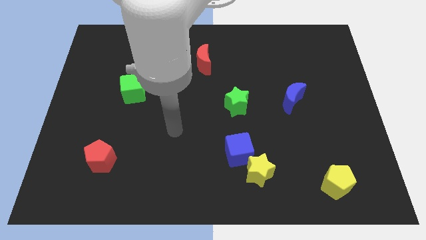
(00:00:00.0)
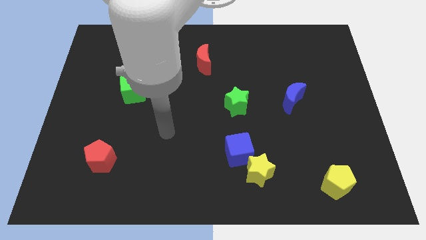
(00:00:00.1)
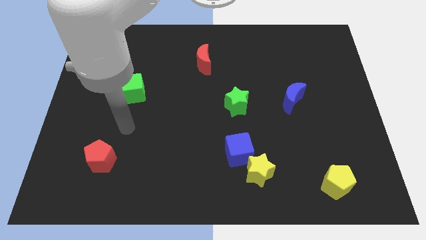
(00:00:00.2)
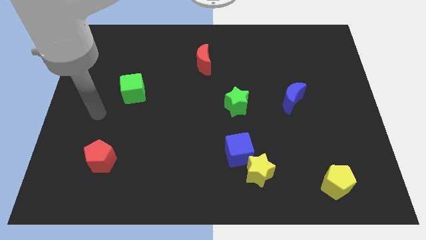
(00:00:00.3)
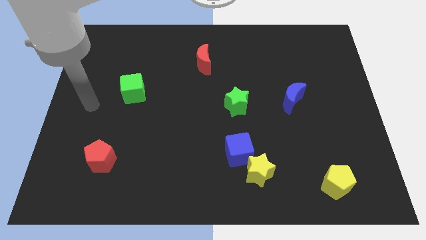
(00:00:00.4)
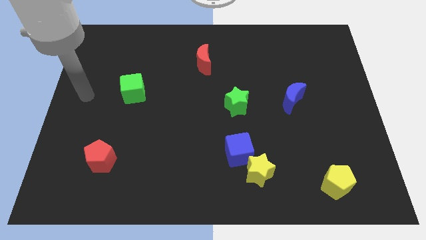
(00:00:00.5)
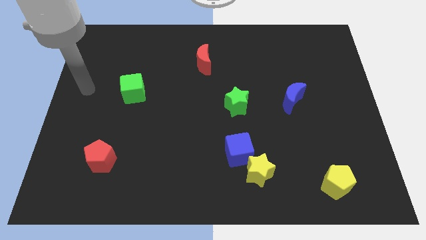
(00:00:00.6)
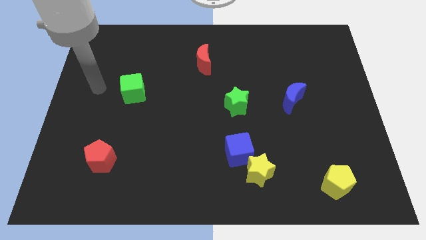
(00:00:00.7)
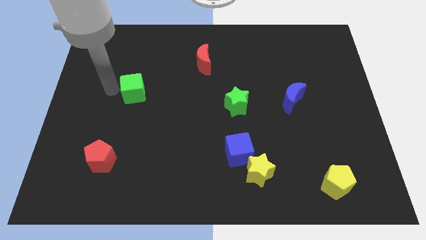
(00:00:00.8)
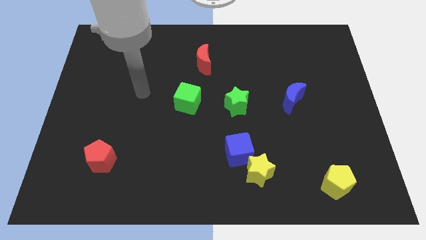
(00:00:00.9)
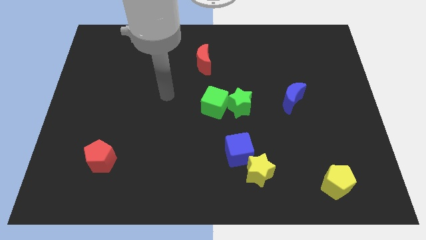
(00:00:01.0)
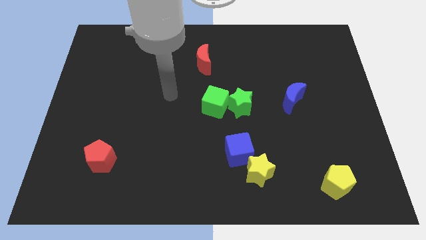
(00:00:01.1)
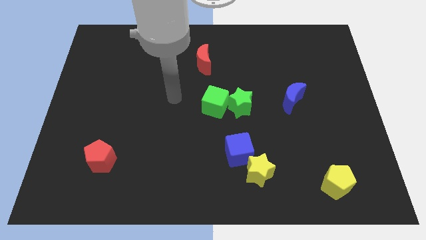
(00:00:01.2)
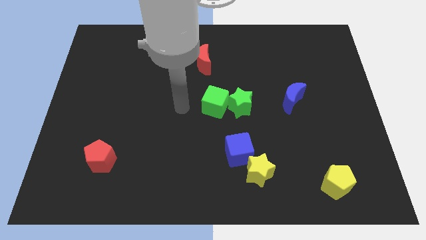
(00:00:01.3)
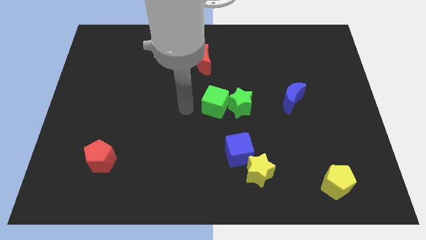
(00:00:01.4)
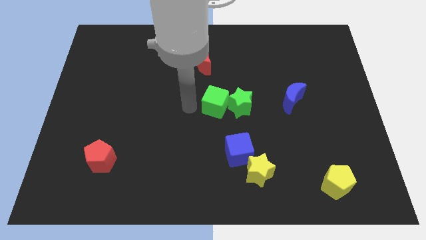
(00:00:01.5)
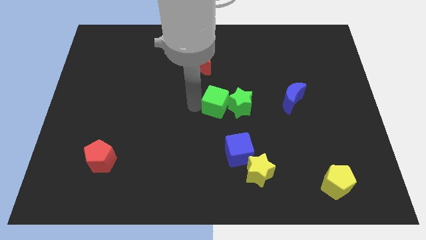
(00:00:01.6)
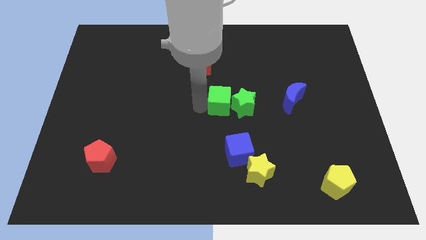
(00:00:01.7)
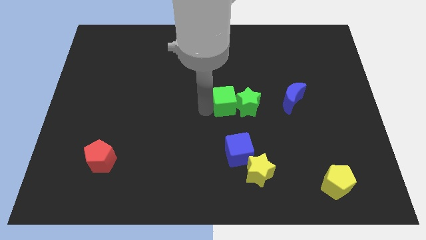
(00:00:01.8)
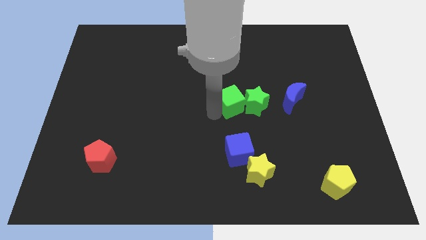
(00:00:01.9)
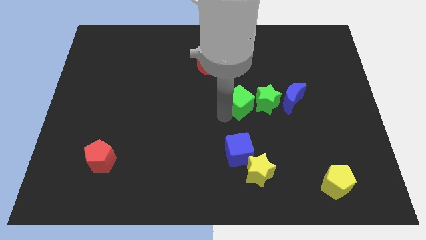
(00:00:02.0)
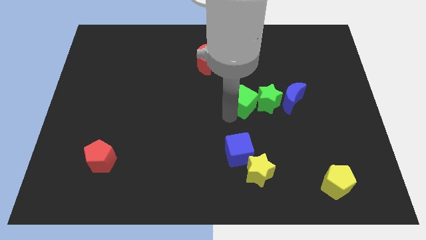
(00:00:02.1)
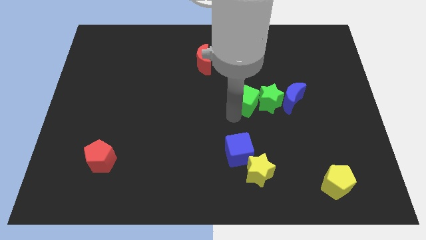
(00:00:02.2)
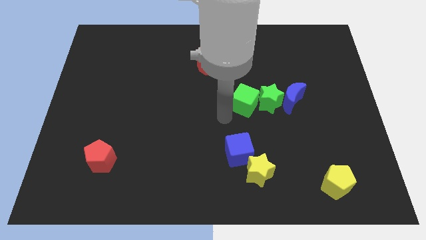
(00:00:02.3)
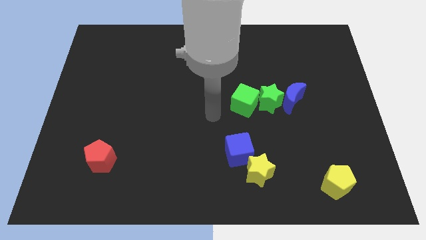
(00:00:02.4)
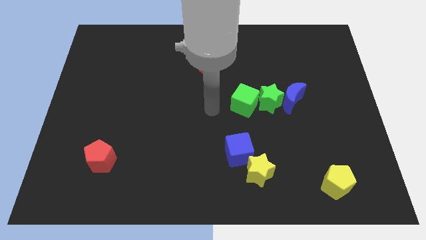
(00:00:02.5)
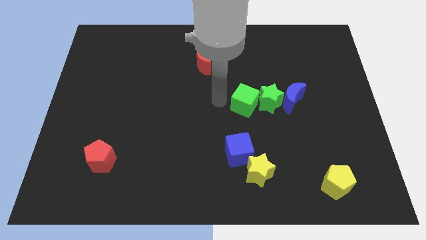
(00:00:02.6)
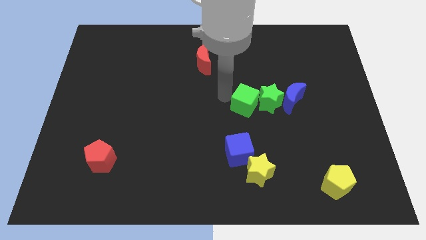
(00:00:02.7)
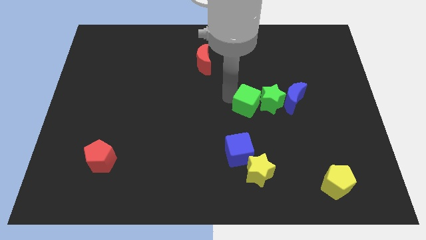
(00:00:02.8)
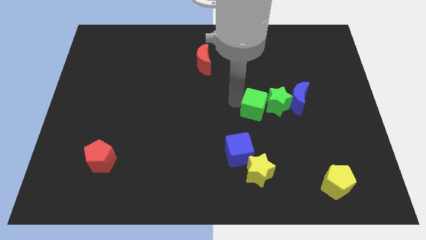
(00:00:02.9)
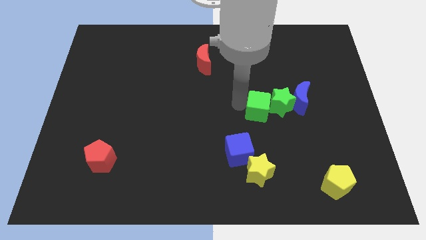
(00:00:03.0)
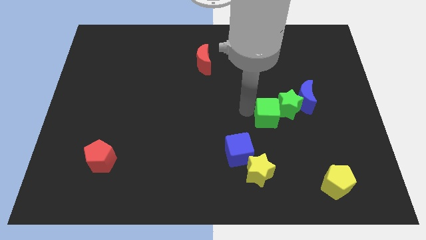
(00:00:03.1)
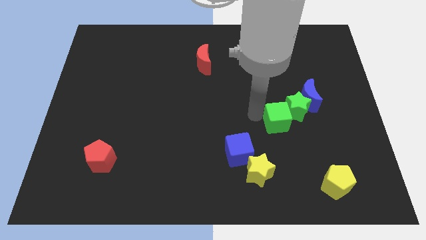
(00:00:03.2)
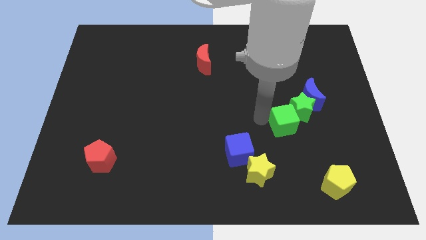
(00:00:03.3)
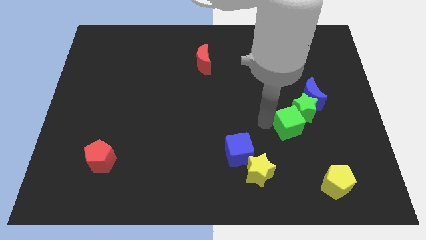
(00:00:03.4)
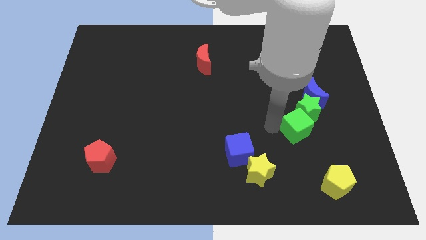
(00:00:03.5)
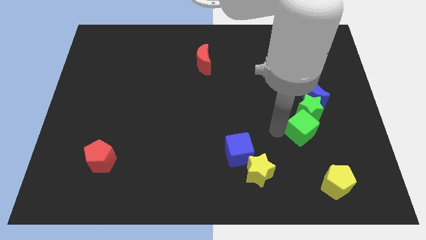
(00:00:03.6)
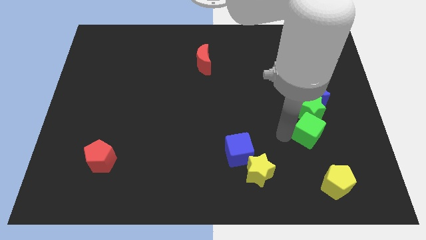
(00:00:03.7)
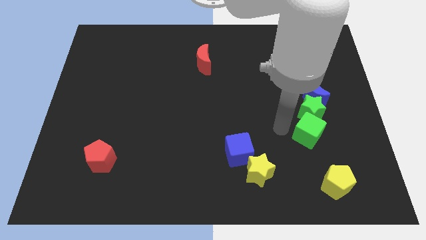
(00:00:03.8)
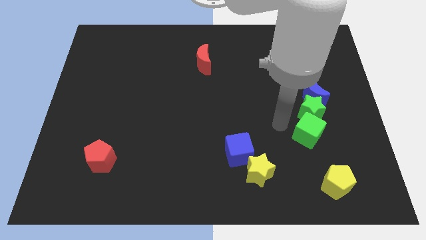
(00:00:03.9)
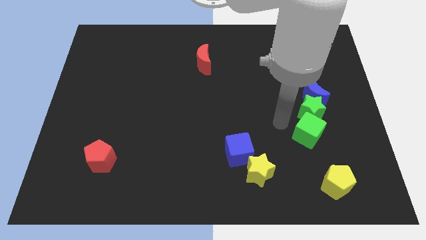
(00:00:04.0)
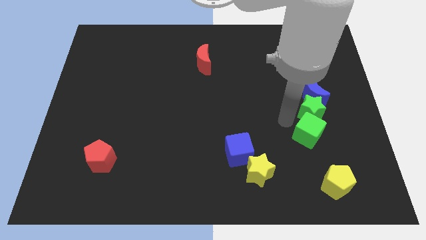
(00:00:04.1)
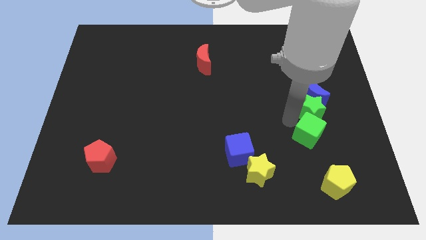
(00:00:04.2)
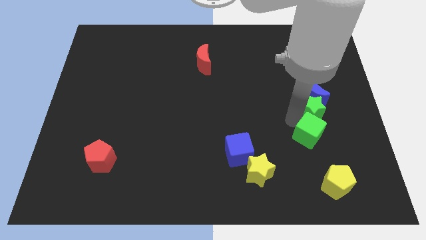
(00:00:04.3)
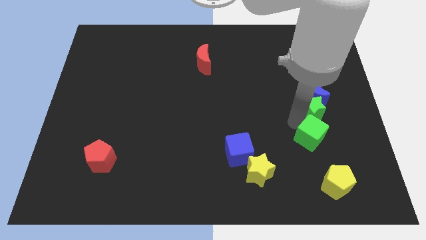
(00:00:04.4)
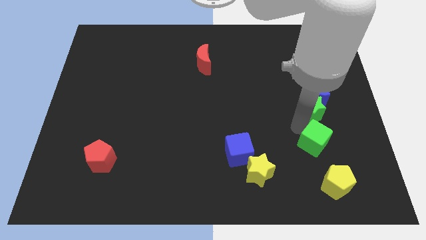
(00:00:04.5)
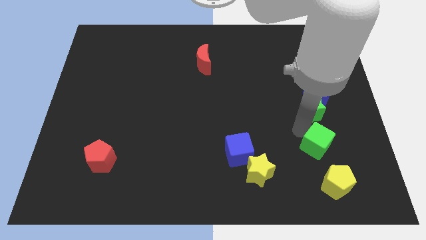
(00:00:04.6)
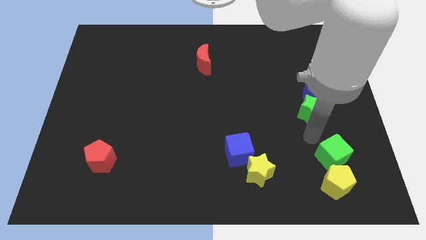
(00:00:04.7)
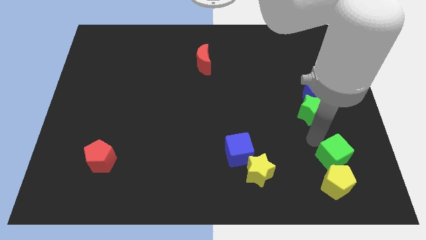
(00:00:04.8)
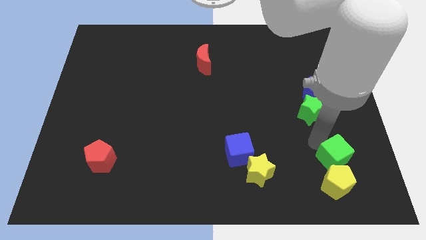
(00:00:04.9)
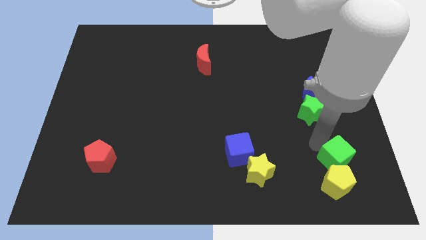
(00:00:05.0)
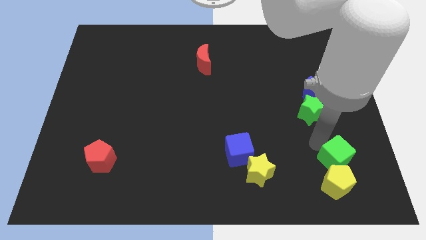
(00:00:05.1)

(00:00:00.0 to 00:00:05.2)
move the green cube next to the yellow pentagon

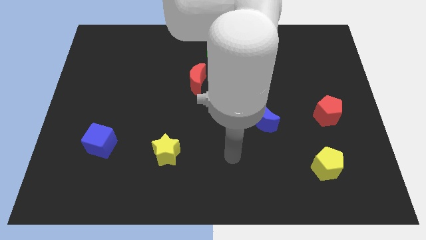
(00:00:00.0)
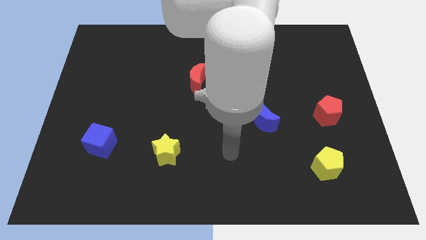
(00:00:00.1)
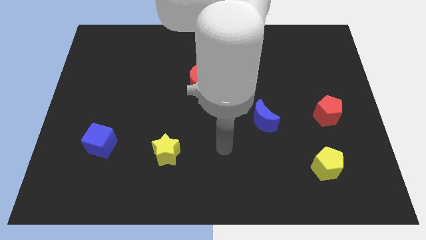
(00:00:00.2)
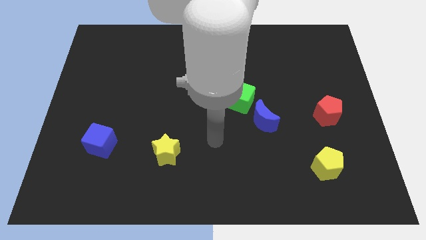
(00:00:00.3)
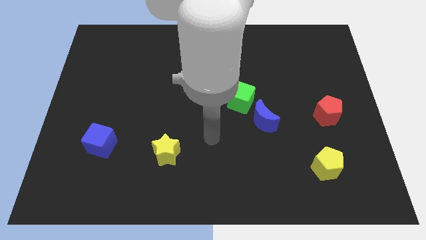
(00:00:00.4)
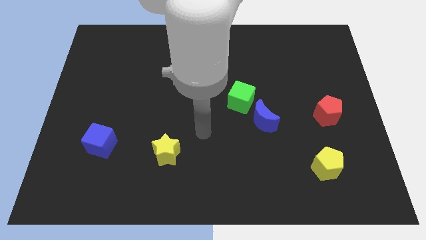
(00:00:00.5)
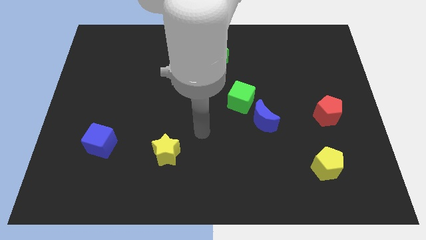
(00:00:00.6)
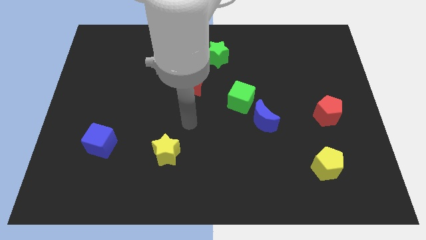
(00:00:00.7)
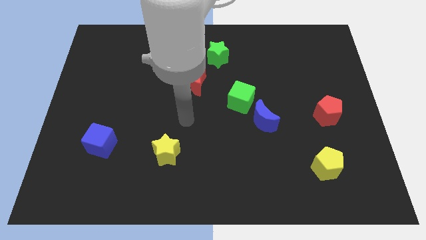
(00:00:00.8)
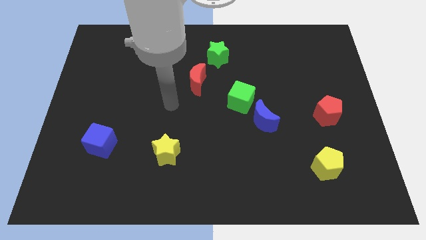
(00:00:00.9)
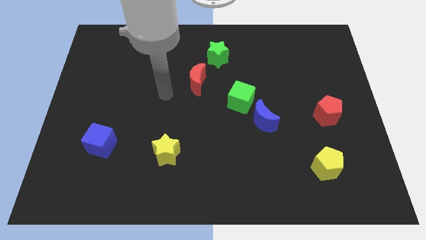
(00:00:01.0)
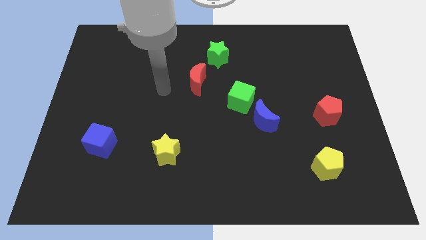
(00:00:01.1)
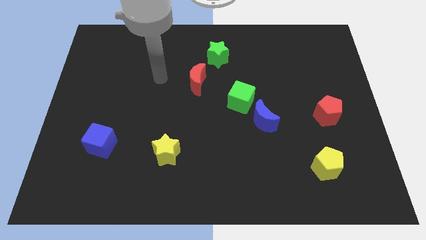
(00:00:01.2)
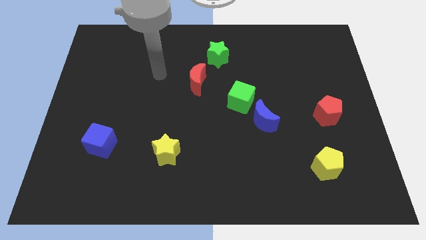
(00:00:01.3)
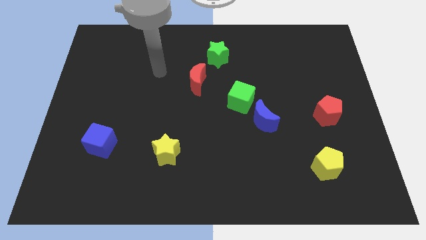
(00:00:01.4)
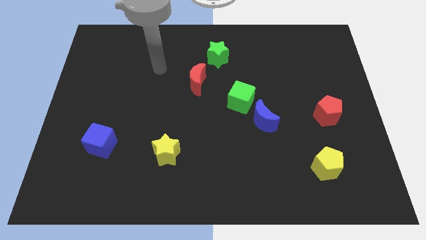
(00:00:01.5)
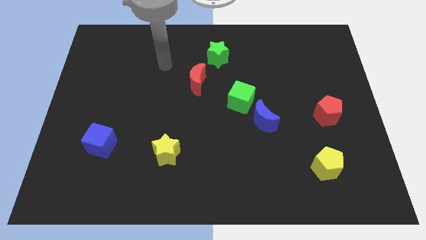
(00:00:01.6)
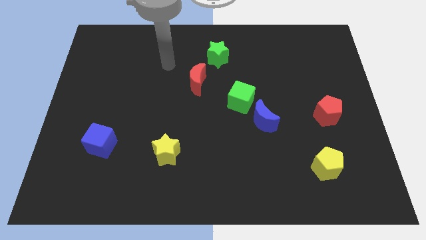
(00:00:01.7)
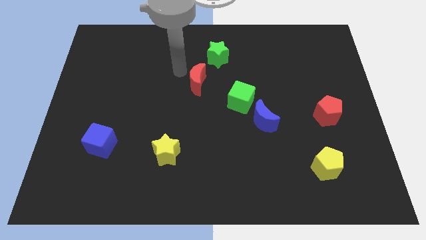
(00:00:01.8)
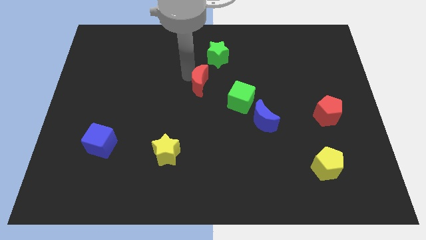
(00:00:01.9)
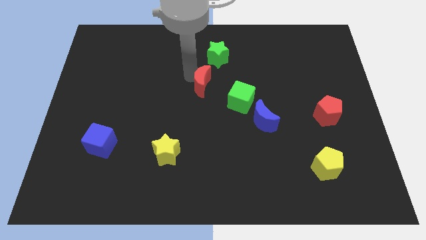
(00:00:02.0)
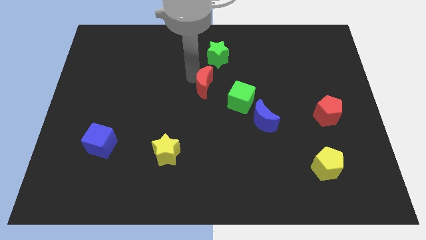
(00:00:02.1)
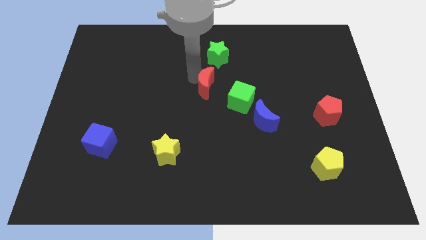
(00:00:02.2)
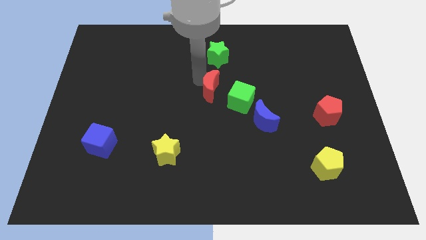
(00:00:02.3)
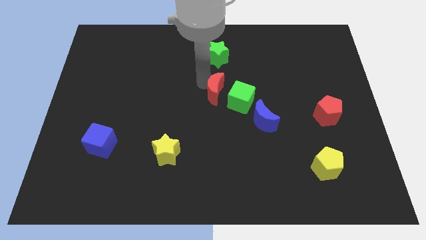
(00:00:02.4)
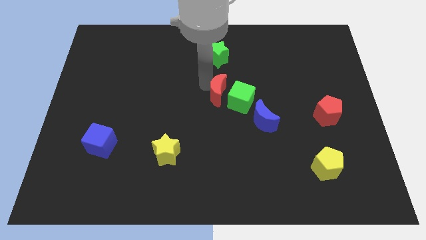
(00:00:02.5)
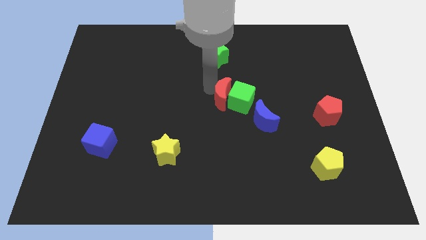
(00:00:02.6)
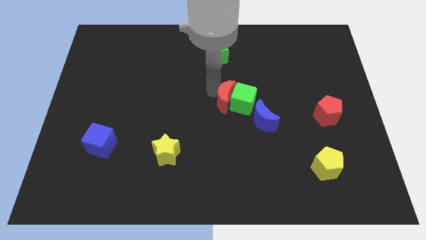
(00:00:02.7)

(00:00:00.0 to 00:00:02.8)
put the red moon next to the green cube

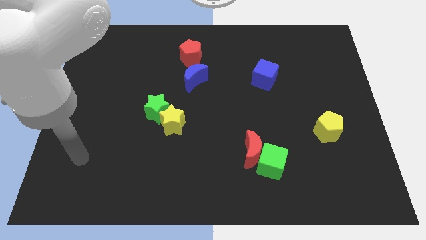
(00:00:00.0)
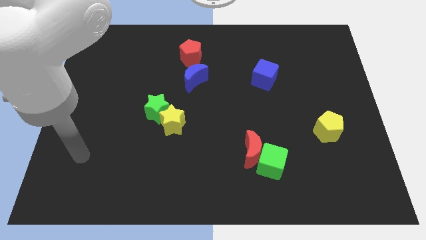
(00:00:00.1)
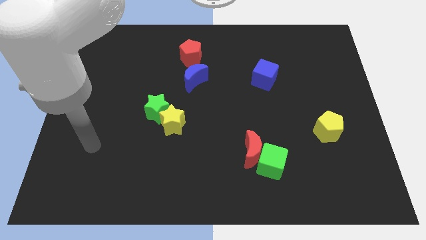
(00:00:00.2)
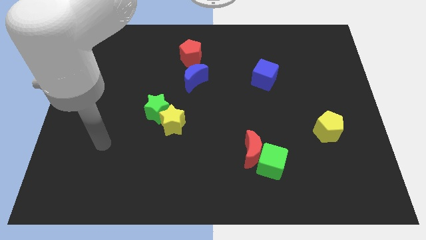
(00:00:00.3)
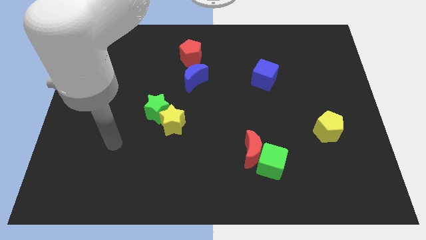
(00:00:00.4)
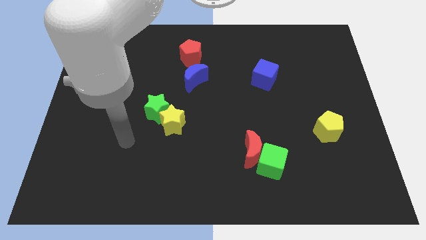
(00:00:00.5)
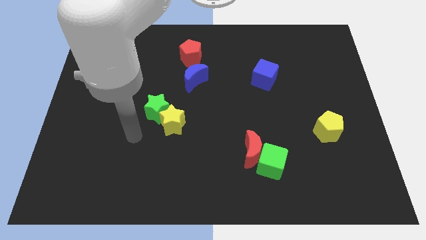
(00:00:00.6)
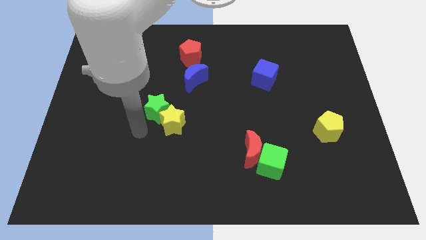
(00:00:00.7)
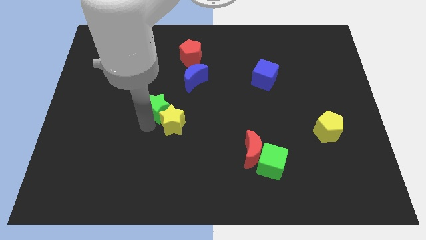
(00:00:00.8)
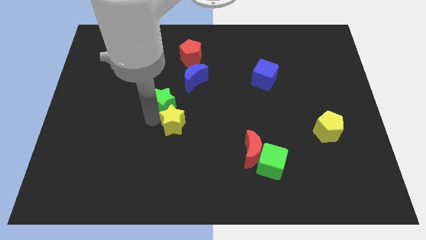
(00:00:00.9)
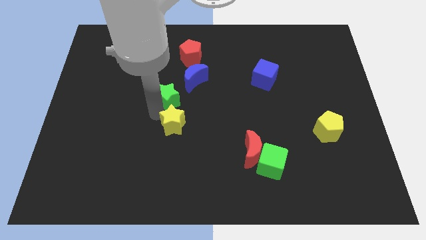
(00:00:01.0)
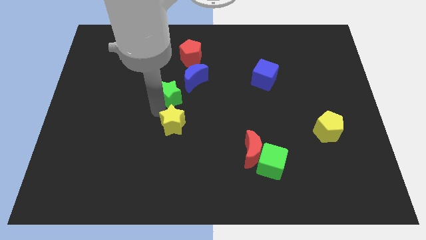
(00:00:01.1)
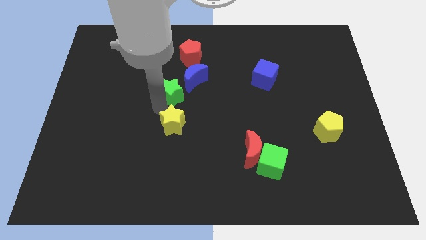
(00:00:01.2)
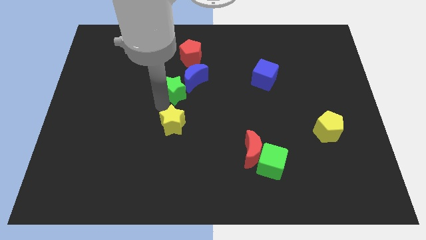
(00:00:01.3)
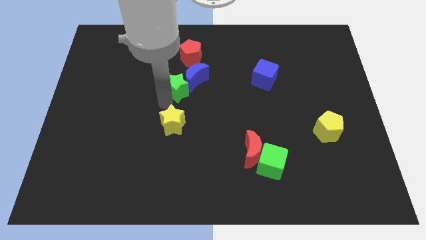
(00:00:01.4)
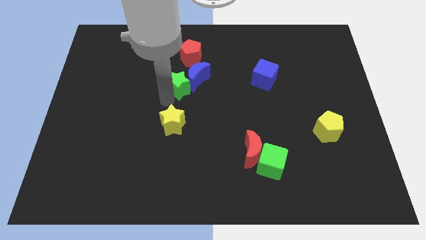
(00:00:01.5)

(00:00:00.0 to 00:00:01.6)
slide the green star close to the blue moon
